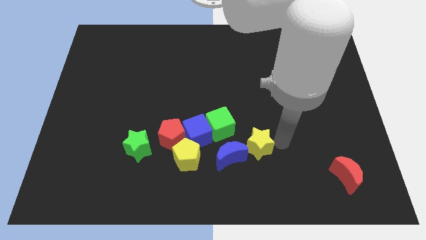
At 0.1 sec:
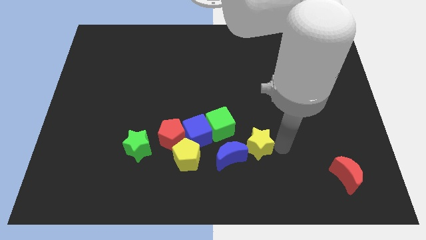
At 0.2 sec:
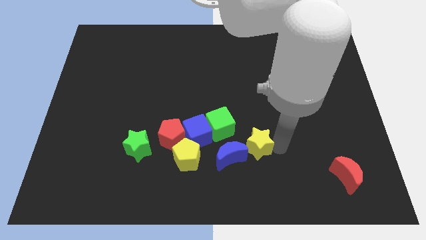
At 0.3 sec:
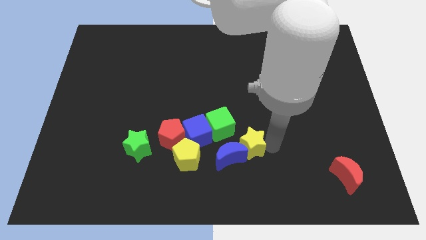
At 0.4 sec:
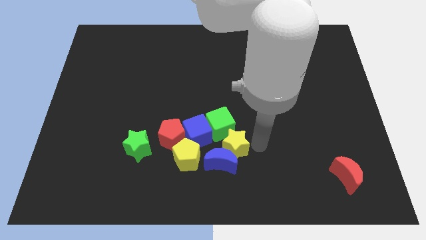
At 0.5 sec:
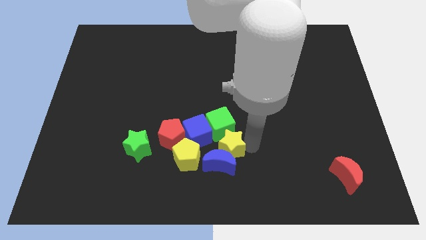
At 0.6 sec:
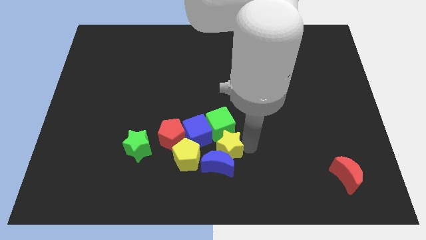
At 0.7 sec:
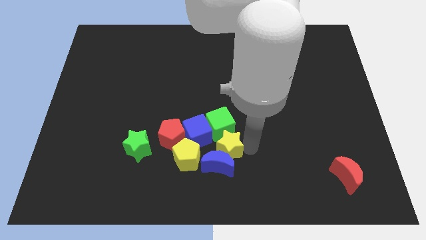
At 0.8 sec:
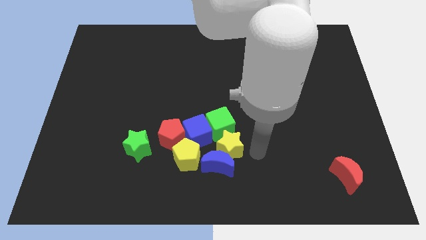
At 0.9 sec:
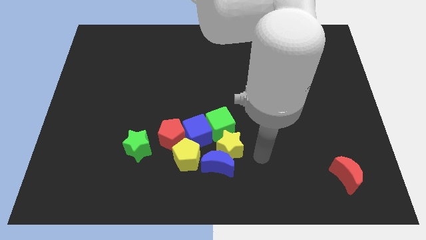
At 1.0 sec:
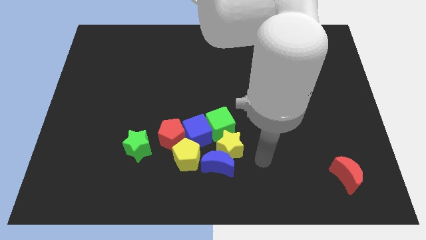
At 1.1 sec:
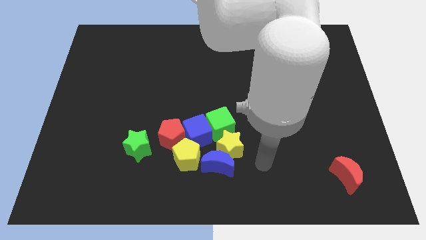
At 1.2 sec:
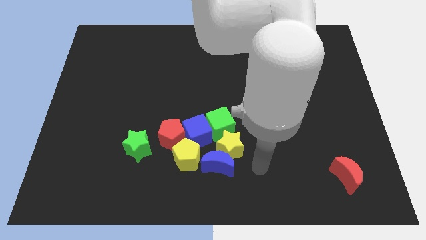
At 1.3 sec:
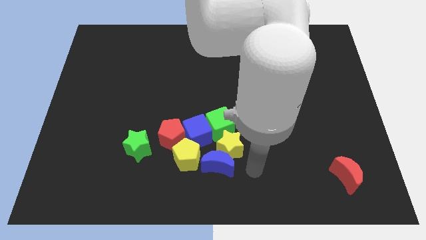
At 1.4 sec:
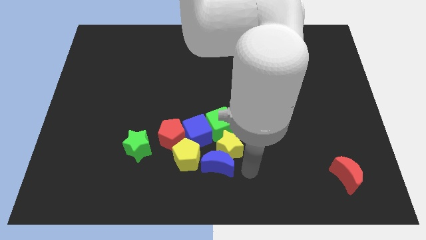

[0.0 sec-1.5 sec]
push the yellow star along with the blue moon towards left

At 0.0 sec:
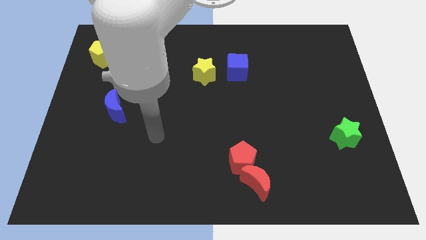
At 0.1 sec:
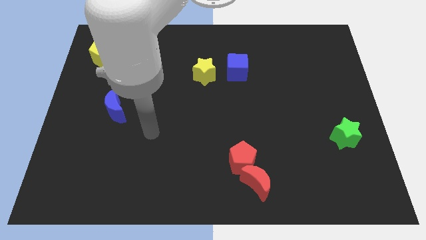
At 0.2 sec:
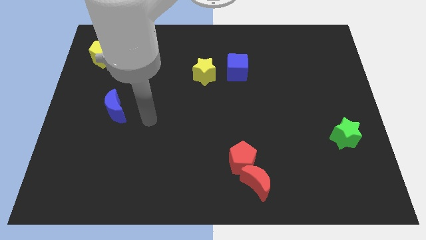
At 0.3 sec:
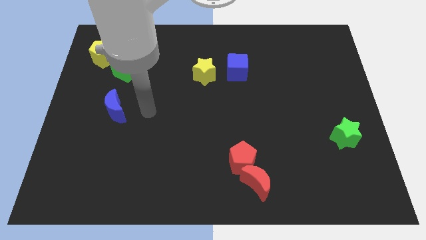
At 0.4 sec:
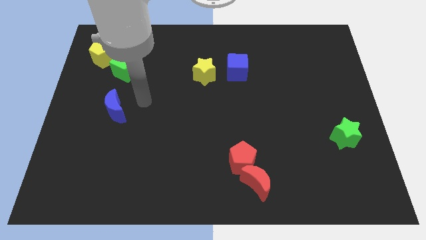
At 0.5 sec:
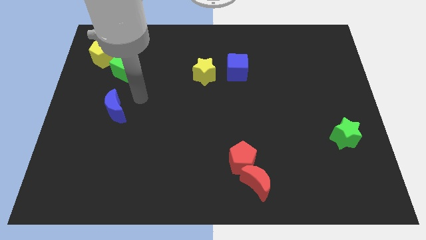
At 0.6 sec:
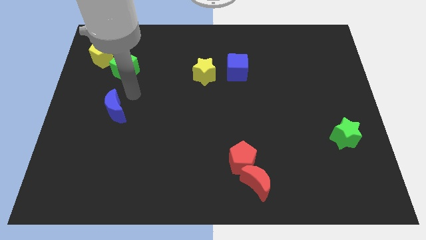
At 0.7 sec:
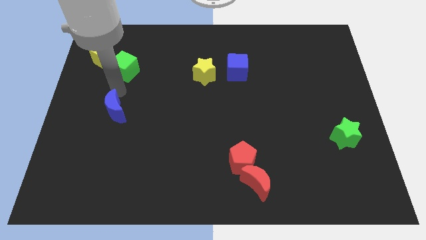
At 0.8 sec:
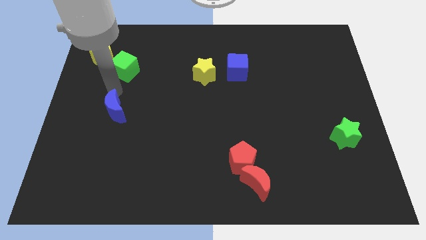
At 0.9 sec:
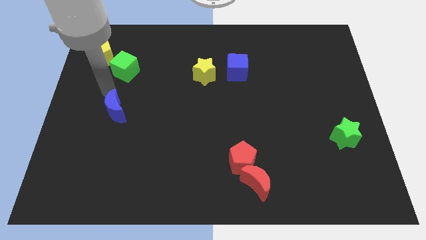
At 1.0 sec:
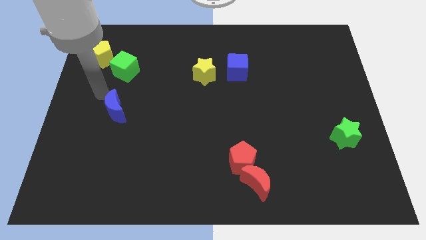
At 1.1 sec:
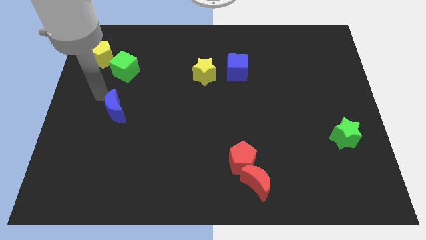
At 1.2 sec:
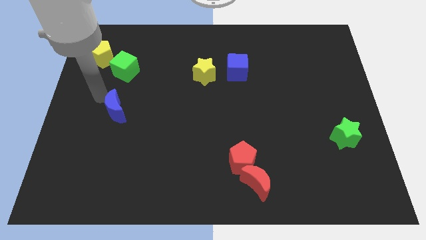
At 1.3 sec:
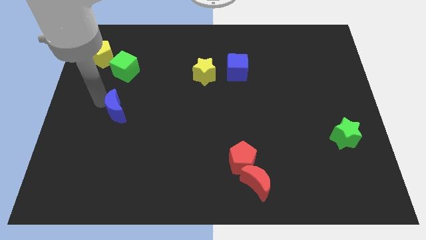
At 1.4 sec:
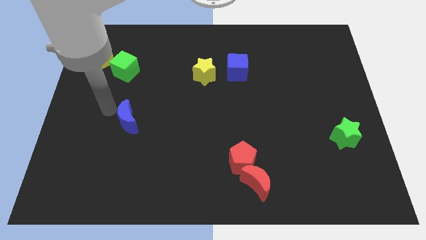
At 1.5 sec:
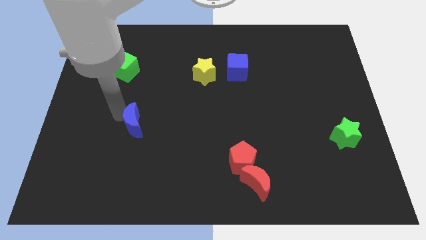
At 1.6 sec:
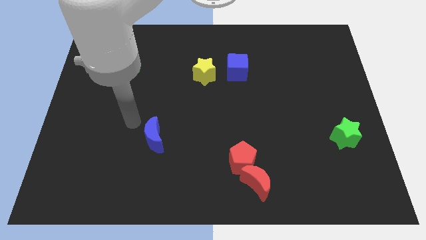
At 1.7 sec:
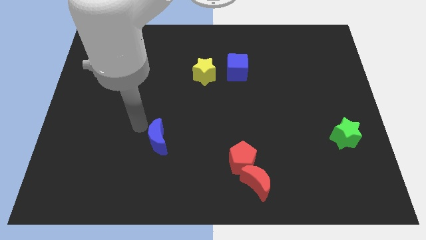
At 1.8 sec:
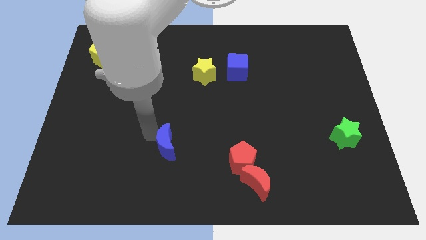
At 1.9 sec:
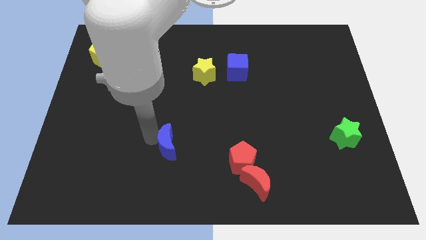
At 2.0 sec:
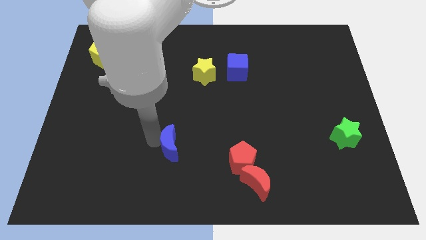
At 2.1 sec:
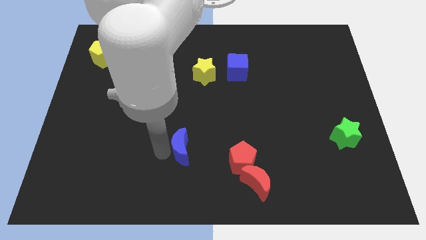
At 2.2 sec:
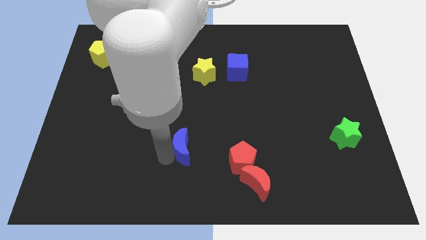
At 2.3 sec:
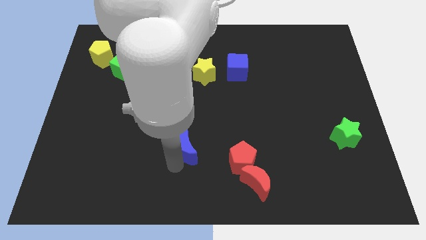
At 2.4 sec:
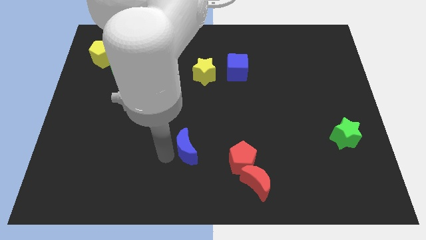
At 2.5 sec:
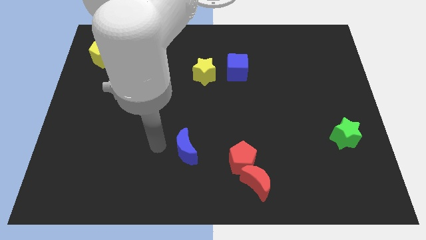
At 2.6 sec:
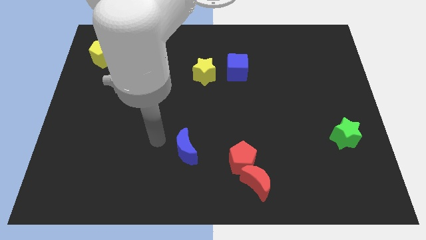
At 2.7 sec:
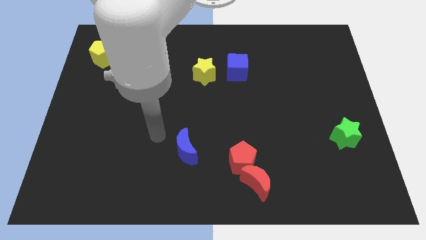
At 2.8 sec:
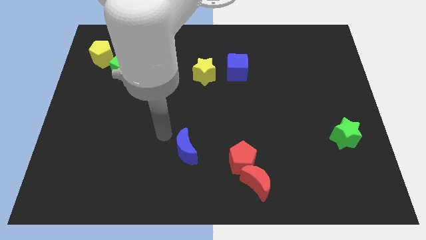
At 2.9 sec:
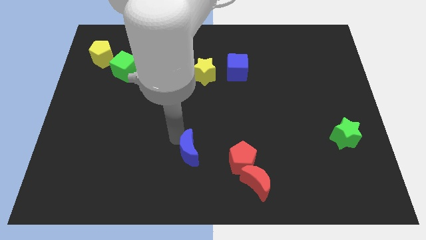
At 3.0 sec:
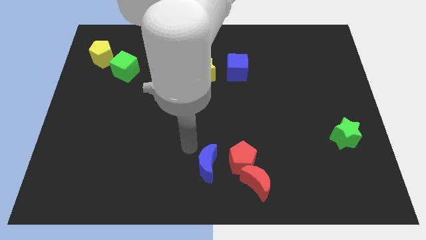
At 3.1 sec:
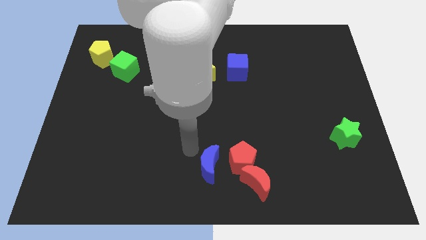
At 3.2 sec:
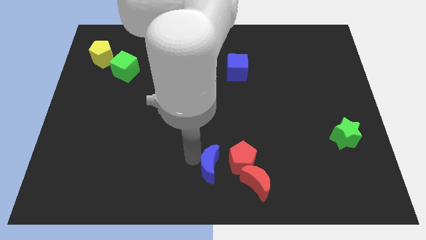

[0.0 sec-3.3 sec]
place the blue crescent at left side of the red pentagon

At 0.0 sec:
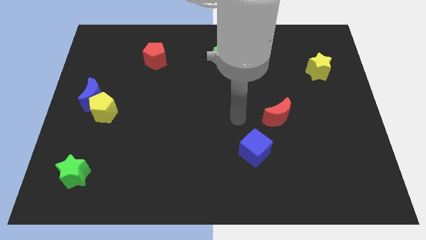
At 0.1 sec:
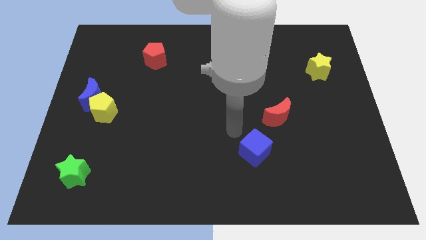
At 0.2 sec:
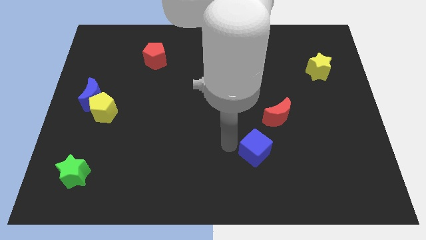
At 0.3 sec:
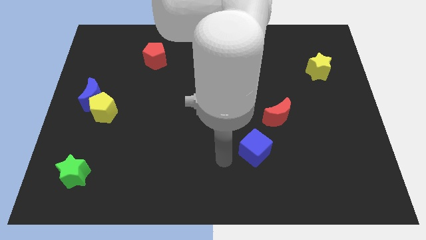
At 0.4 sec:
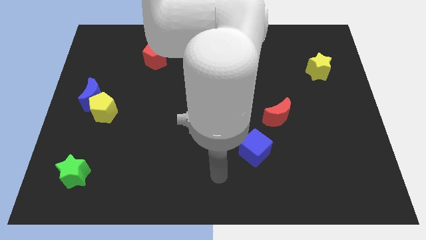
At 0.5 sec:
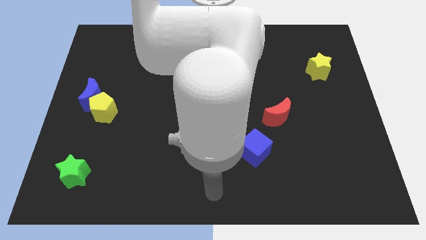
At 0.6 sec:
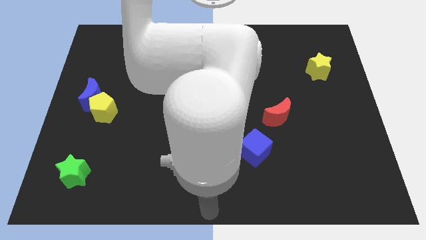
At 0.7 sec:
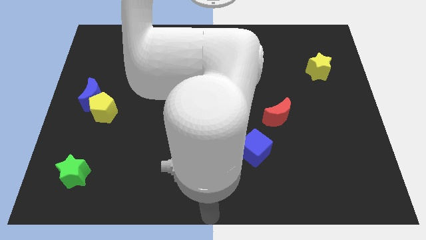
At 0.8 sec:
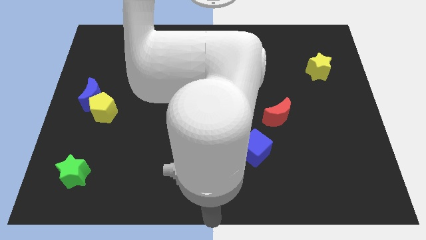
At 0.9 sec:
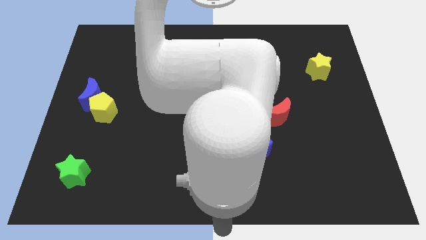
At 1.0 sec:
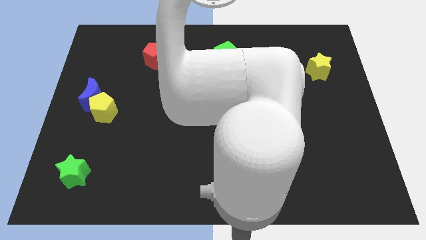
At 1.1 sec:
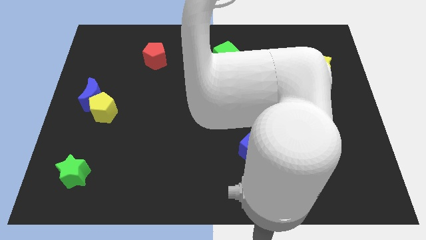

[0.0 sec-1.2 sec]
place arm parallel to the bottom of the blue cube

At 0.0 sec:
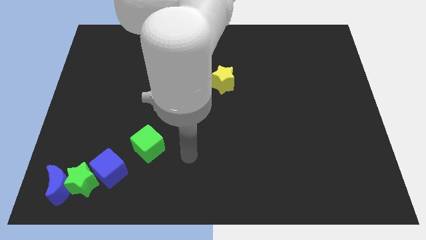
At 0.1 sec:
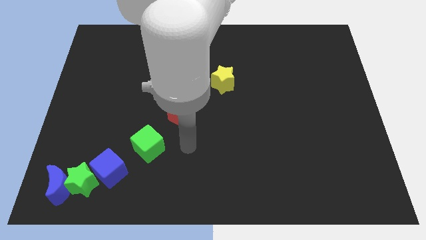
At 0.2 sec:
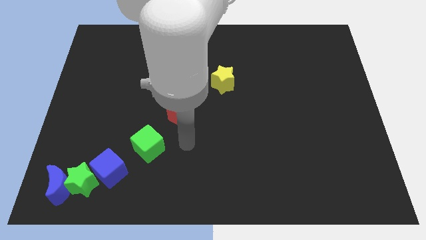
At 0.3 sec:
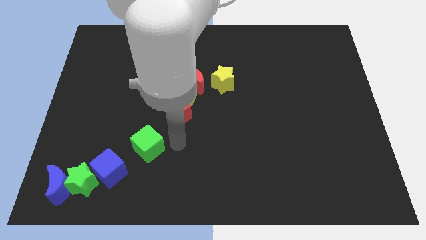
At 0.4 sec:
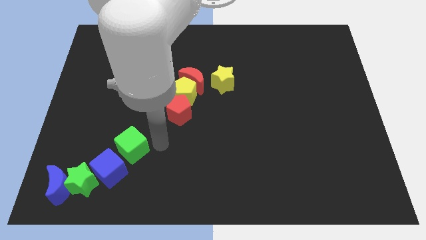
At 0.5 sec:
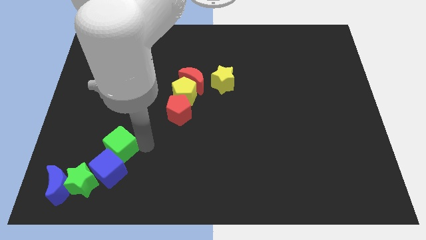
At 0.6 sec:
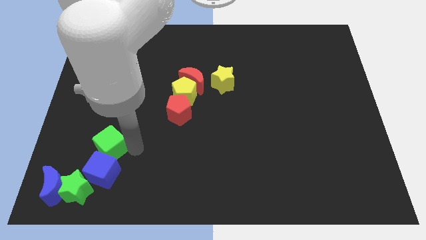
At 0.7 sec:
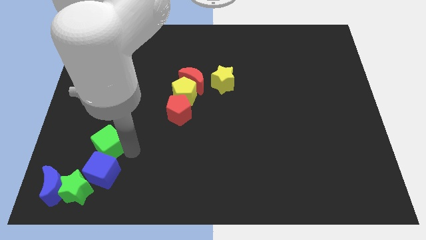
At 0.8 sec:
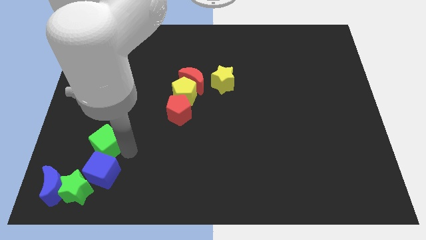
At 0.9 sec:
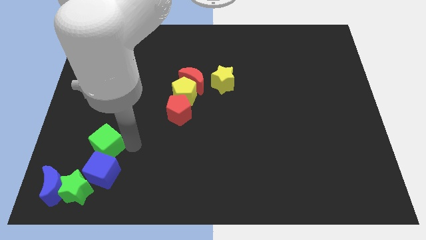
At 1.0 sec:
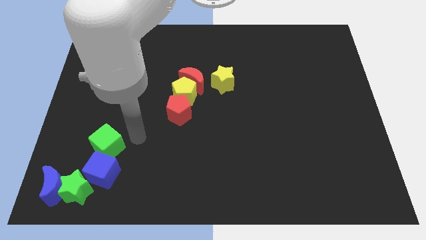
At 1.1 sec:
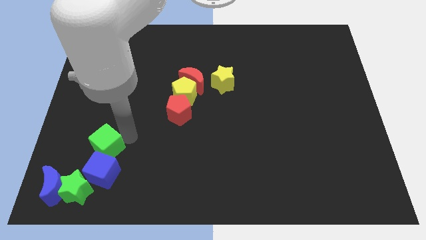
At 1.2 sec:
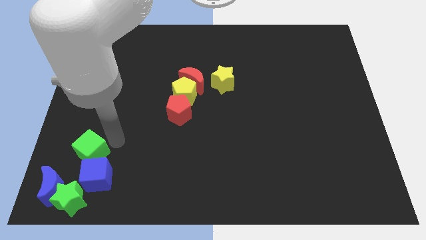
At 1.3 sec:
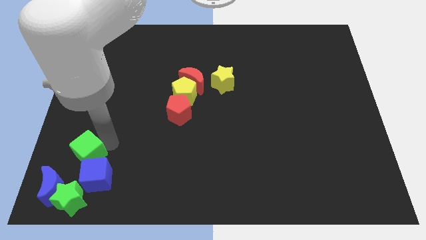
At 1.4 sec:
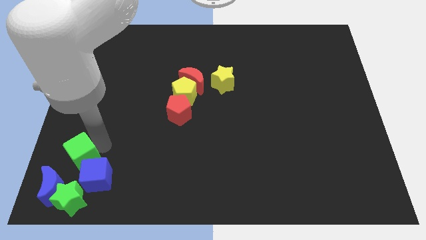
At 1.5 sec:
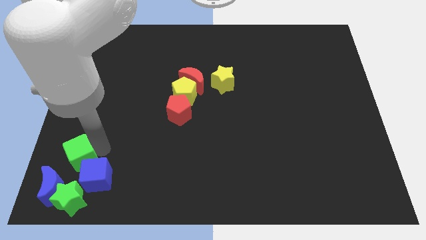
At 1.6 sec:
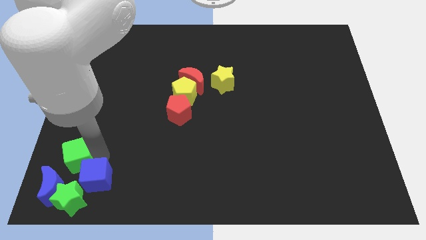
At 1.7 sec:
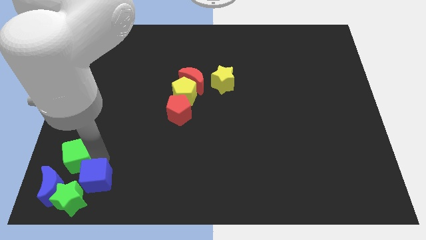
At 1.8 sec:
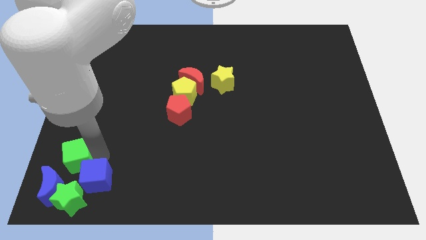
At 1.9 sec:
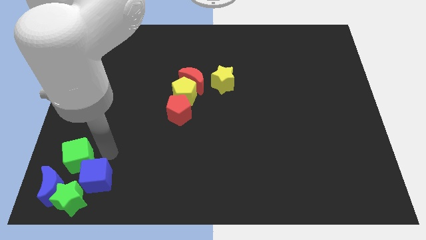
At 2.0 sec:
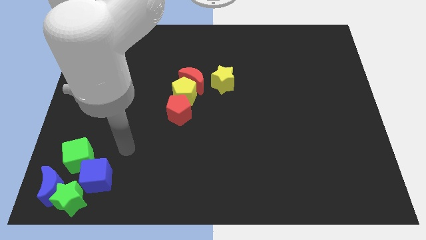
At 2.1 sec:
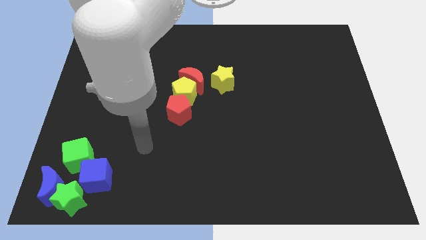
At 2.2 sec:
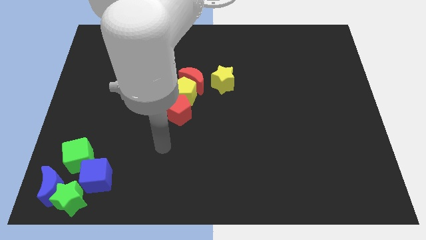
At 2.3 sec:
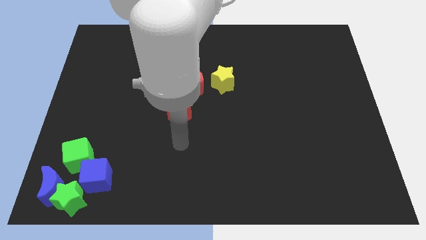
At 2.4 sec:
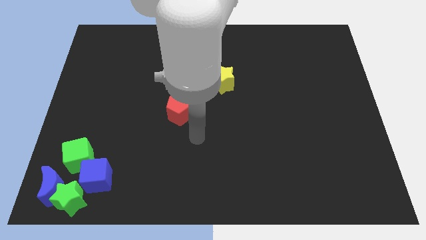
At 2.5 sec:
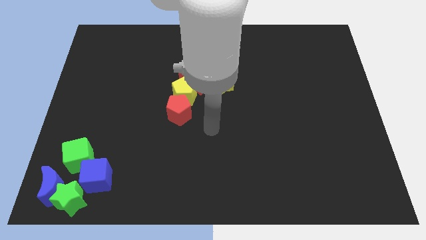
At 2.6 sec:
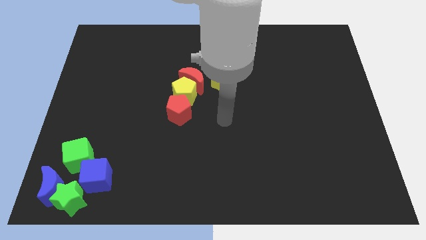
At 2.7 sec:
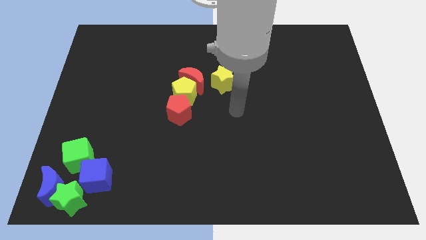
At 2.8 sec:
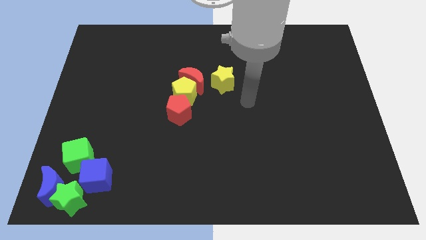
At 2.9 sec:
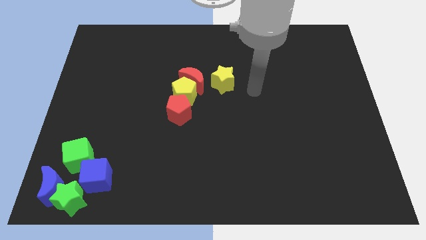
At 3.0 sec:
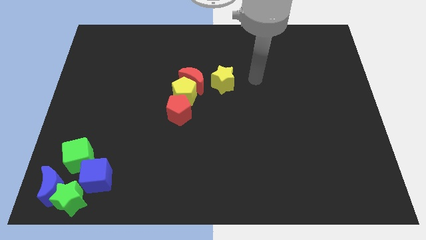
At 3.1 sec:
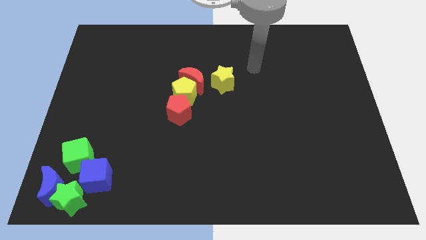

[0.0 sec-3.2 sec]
adjust the green cube on the top of the green star vertically
